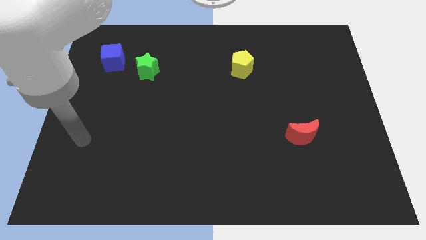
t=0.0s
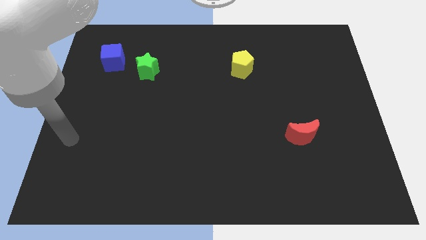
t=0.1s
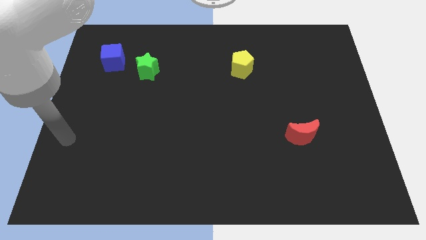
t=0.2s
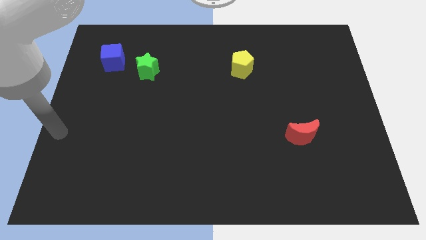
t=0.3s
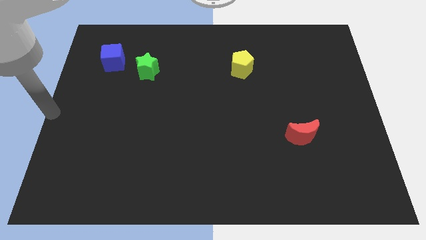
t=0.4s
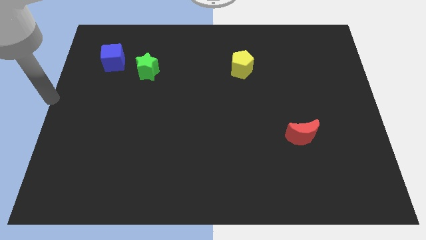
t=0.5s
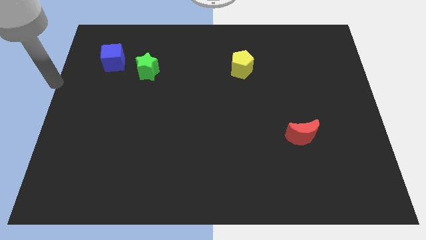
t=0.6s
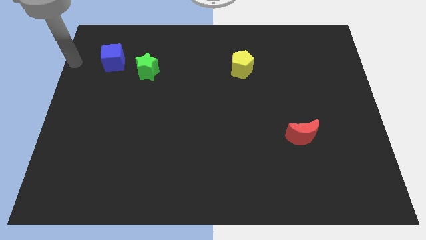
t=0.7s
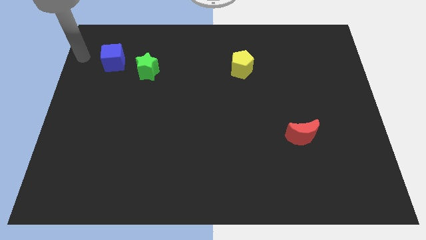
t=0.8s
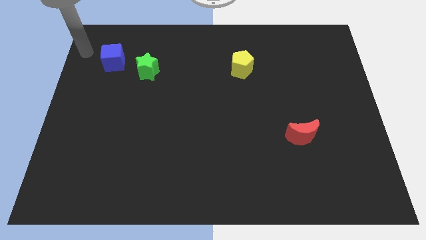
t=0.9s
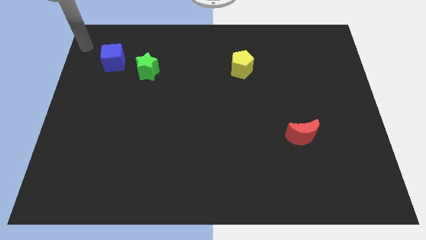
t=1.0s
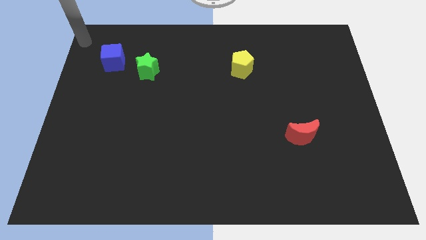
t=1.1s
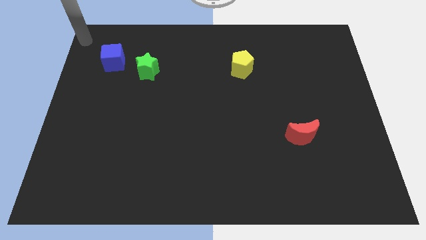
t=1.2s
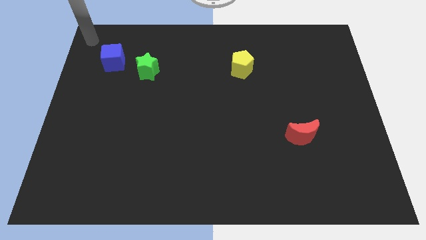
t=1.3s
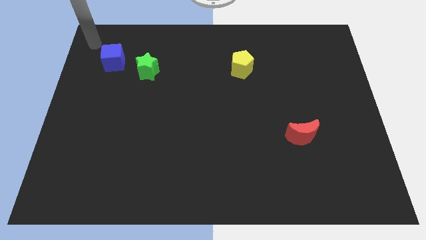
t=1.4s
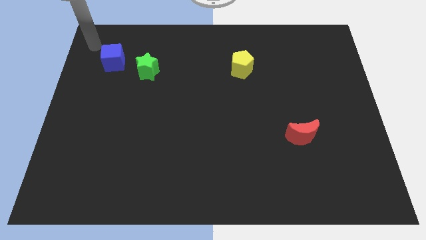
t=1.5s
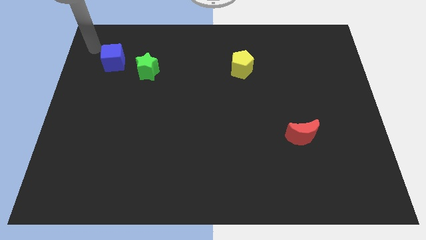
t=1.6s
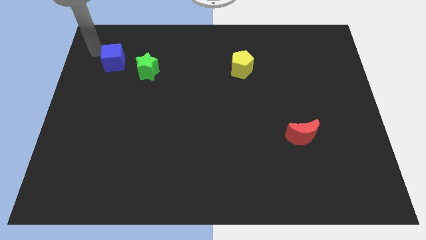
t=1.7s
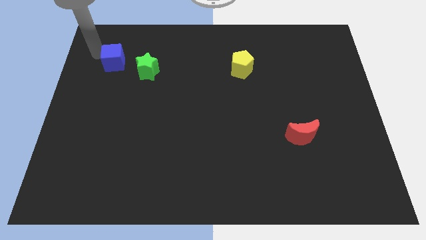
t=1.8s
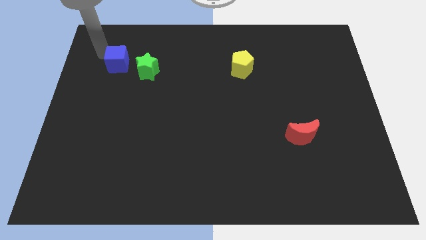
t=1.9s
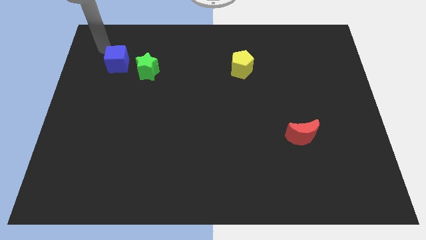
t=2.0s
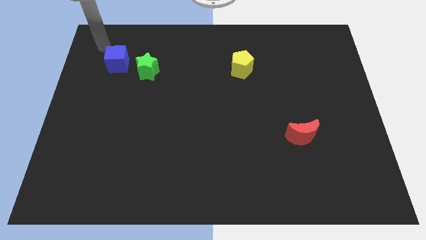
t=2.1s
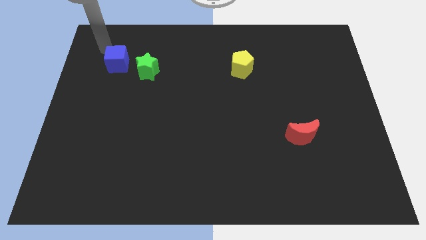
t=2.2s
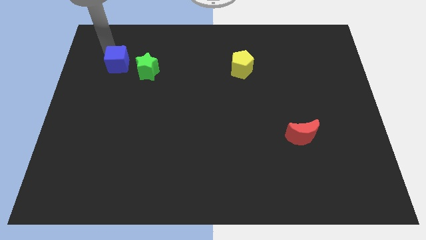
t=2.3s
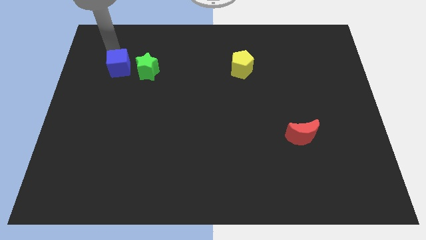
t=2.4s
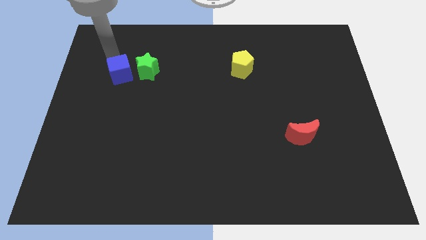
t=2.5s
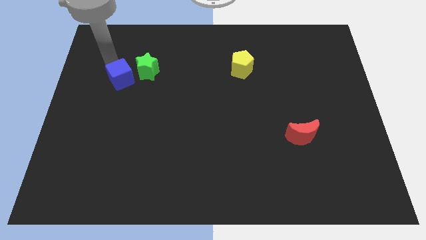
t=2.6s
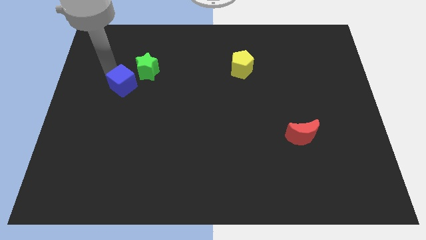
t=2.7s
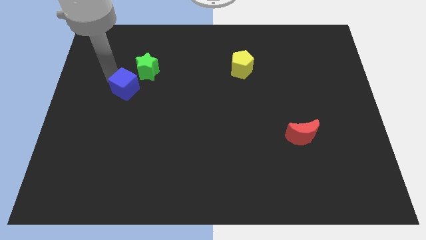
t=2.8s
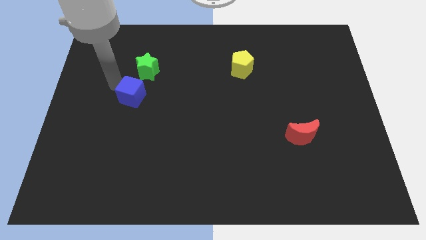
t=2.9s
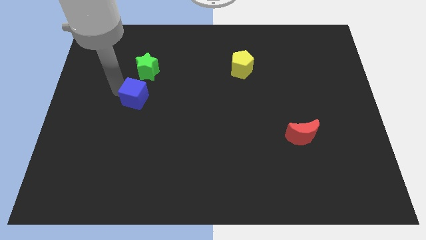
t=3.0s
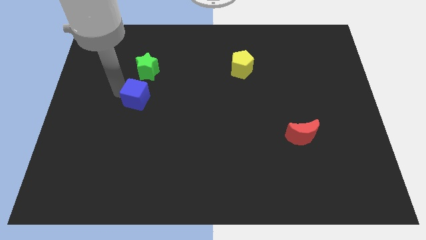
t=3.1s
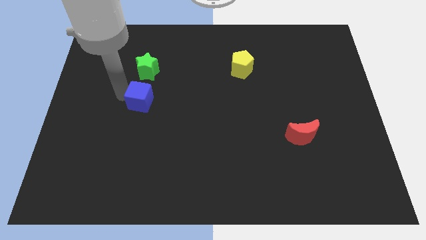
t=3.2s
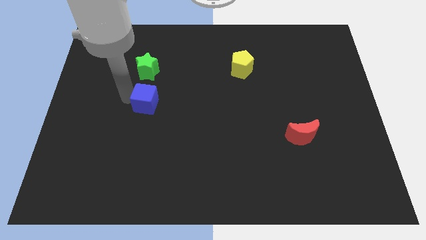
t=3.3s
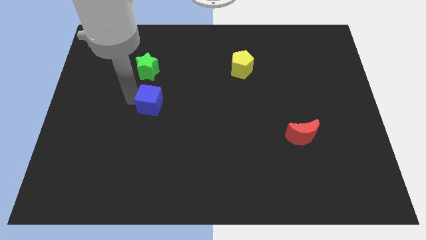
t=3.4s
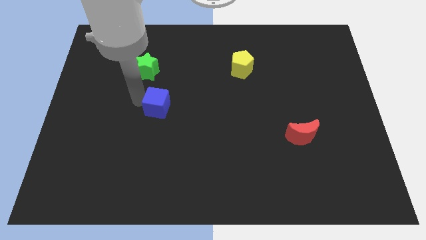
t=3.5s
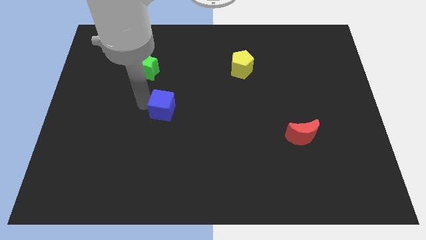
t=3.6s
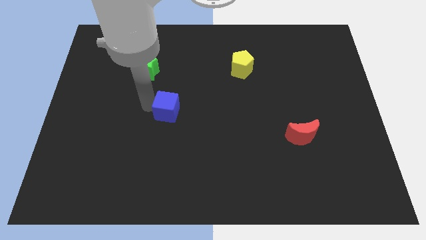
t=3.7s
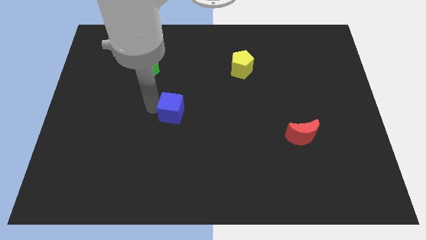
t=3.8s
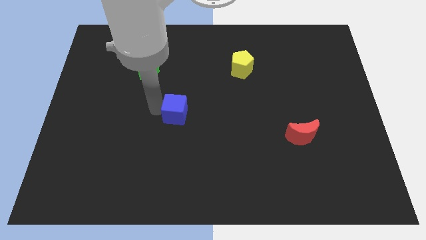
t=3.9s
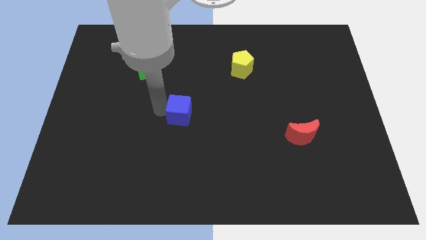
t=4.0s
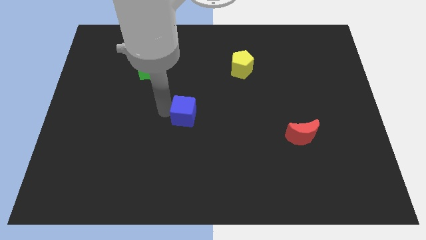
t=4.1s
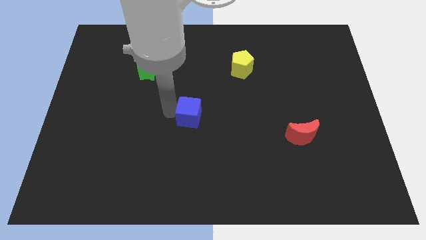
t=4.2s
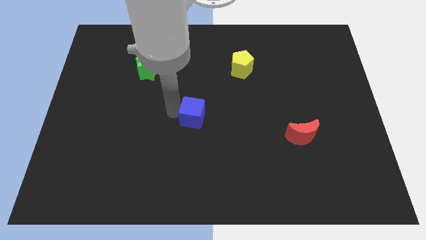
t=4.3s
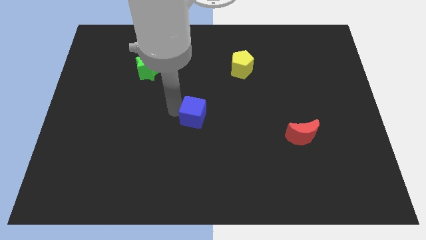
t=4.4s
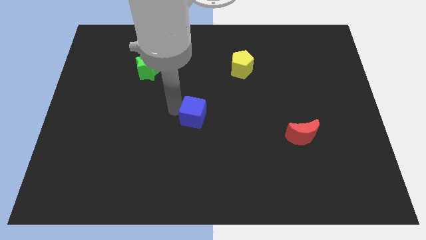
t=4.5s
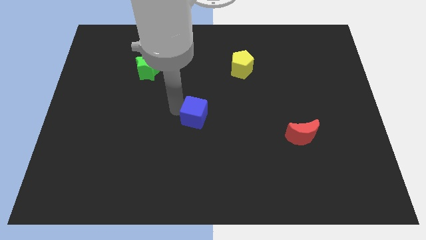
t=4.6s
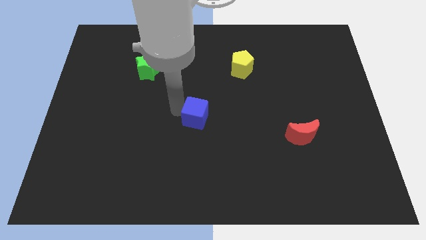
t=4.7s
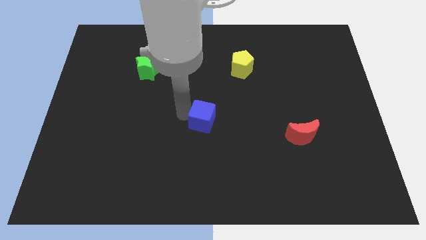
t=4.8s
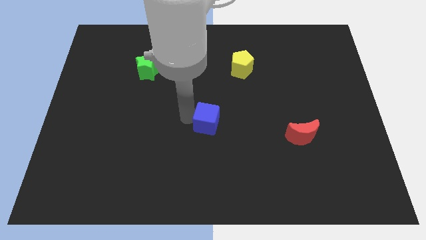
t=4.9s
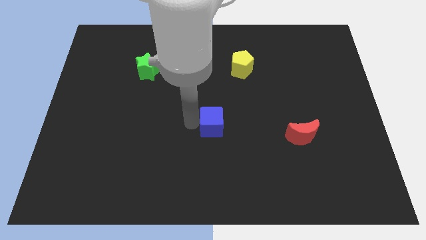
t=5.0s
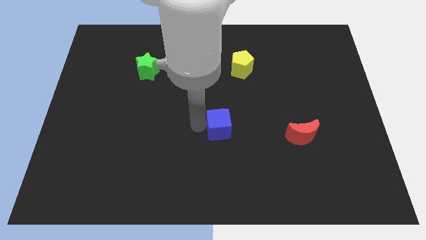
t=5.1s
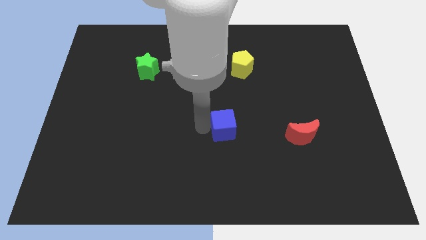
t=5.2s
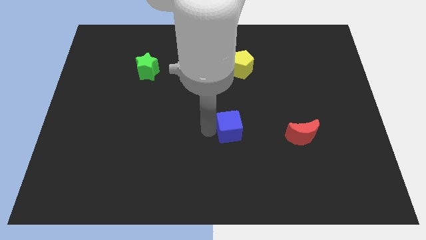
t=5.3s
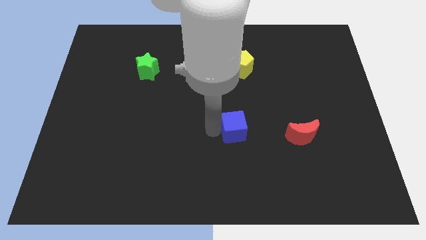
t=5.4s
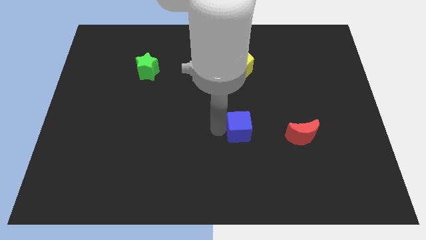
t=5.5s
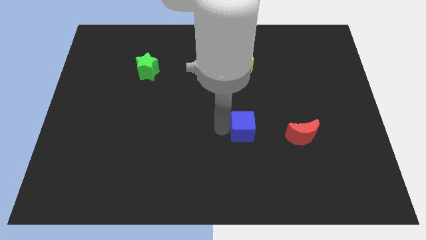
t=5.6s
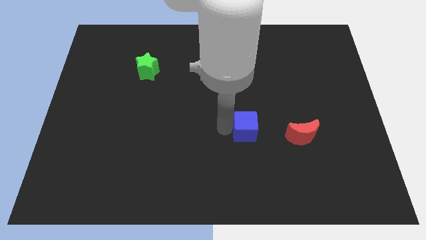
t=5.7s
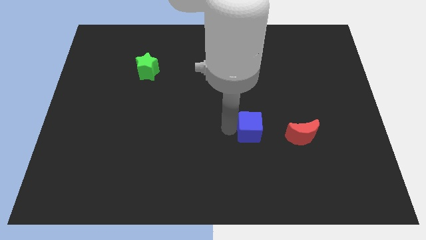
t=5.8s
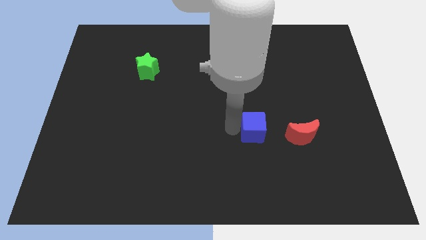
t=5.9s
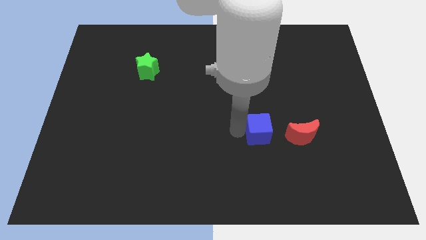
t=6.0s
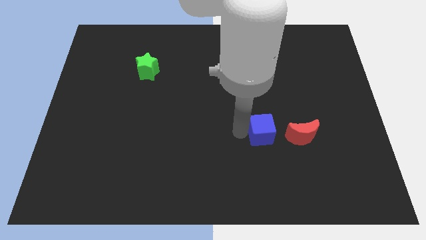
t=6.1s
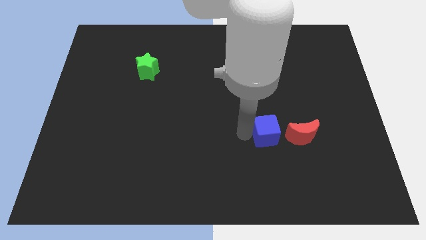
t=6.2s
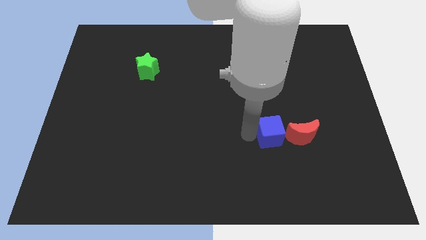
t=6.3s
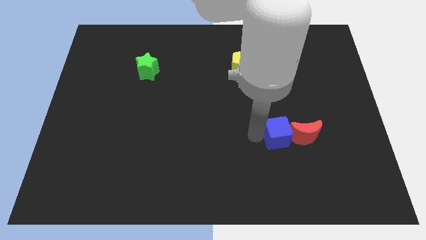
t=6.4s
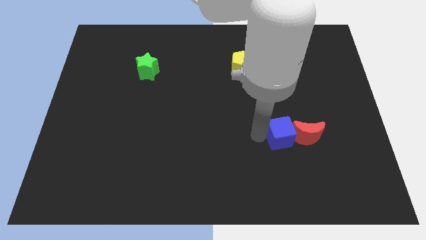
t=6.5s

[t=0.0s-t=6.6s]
push the cube close to the moon

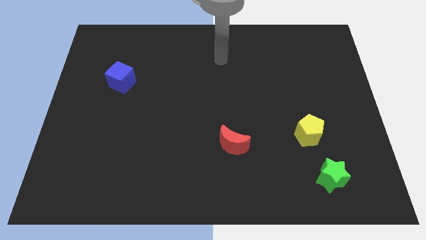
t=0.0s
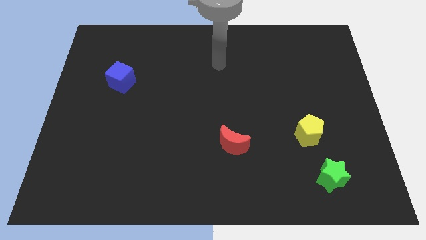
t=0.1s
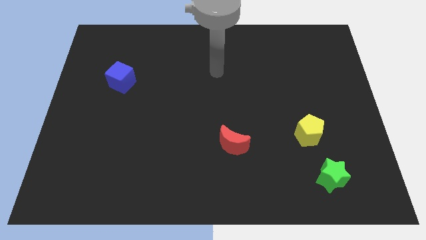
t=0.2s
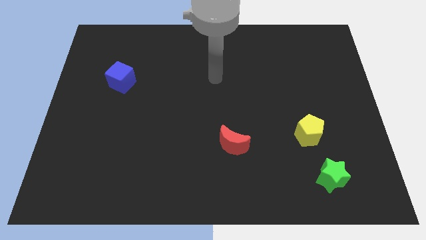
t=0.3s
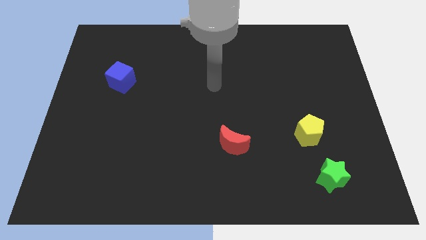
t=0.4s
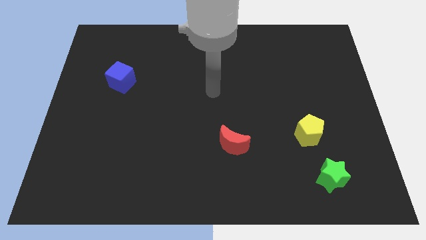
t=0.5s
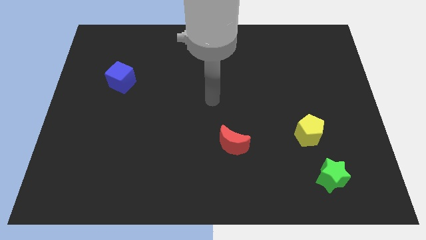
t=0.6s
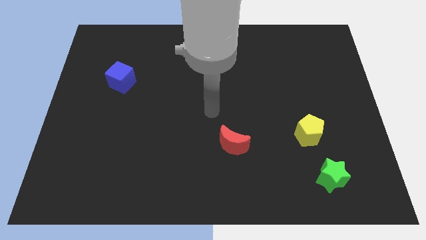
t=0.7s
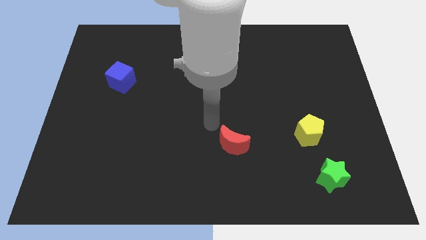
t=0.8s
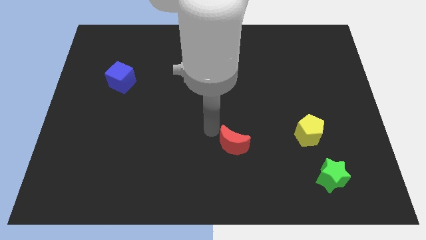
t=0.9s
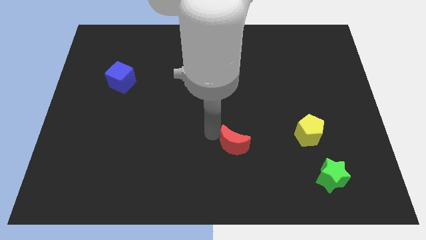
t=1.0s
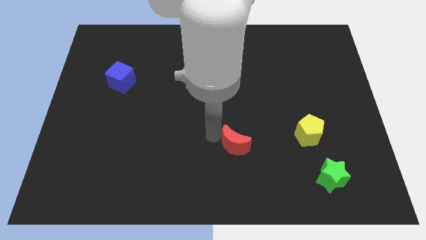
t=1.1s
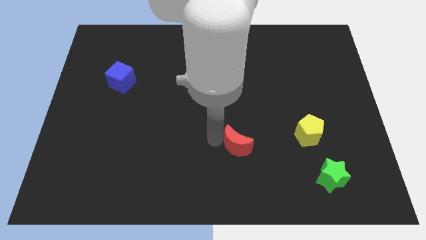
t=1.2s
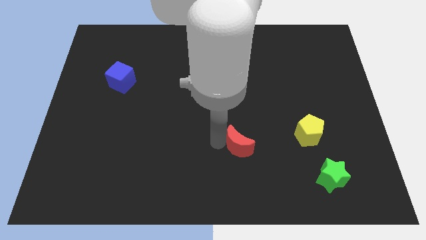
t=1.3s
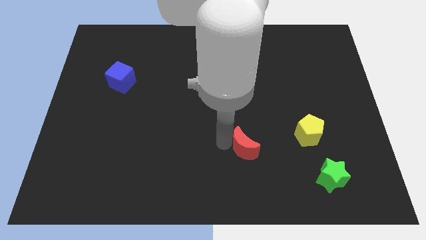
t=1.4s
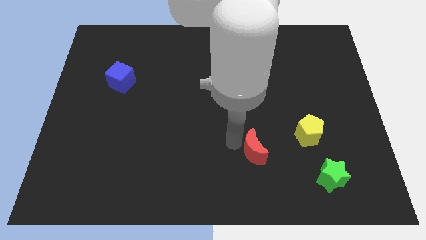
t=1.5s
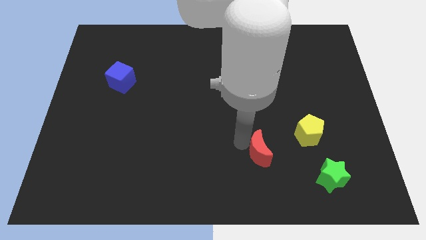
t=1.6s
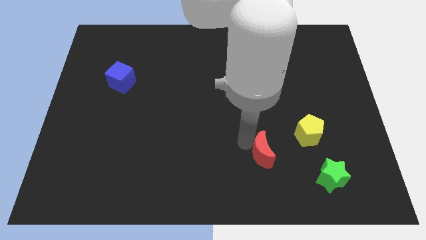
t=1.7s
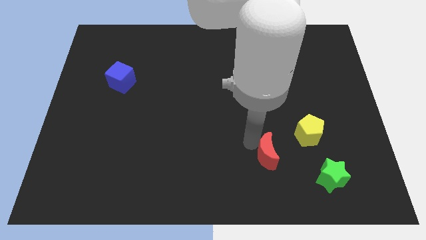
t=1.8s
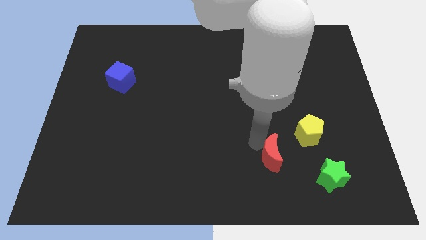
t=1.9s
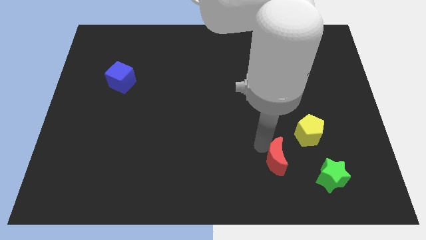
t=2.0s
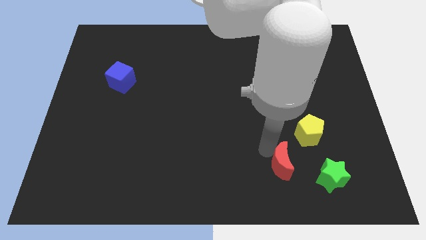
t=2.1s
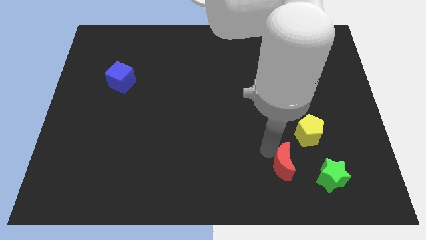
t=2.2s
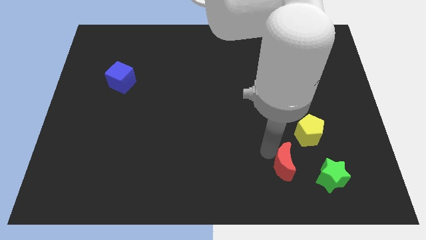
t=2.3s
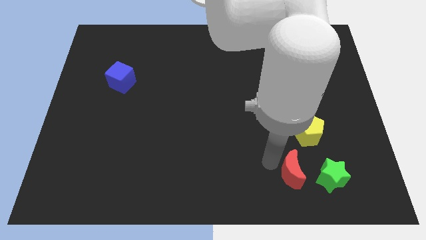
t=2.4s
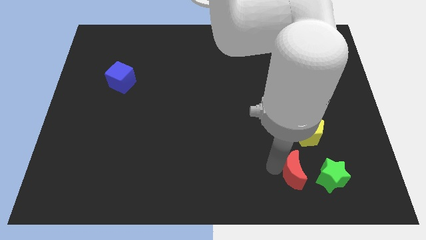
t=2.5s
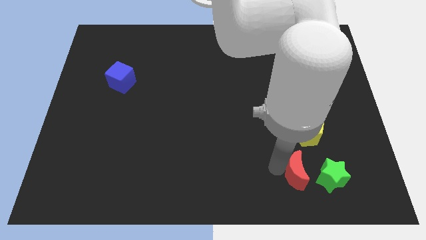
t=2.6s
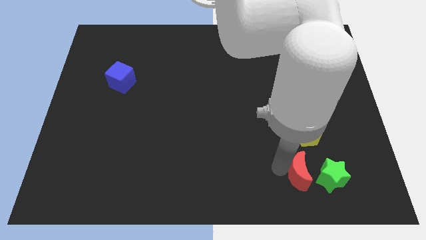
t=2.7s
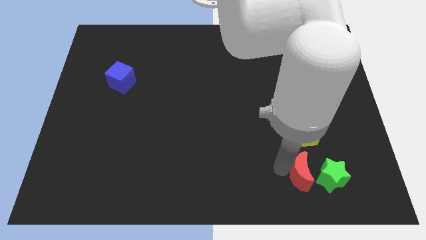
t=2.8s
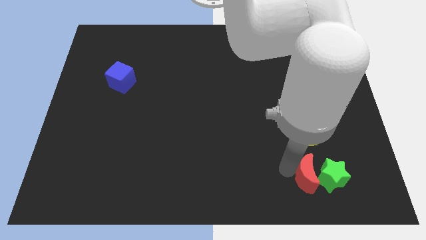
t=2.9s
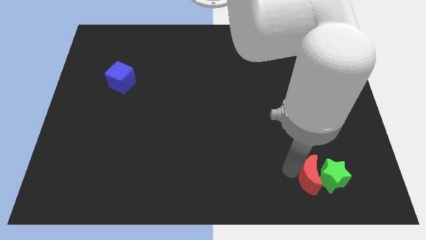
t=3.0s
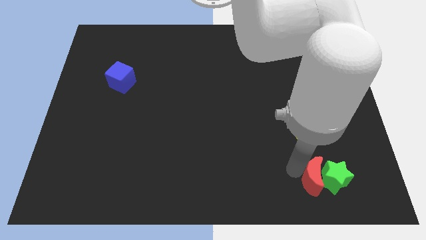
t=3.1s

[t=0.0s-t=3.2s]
move the moon towards the green star
